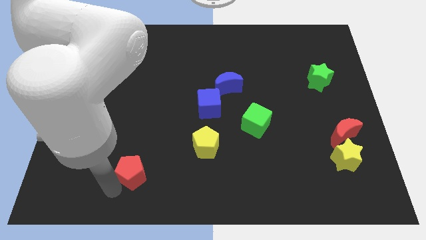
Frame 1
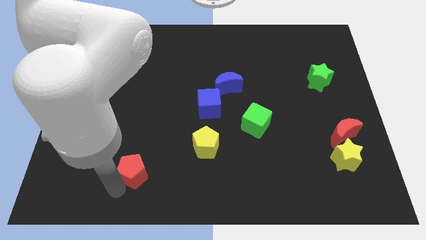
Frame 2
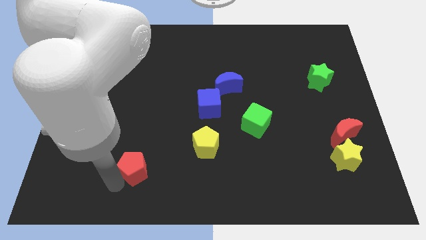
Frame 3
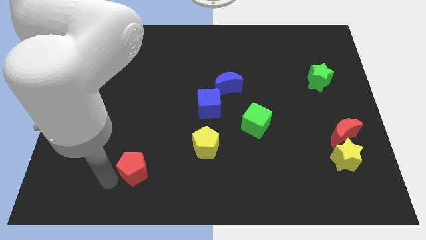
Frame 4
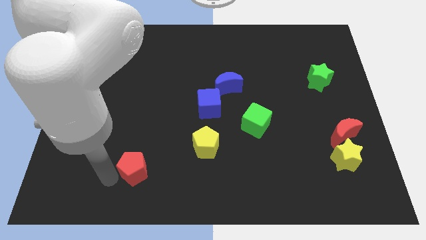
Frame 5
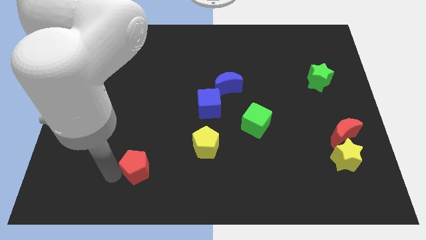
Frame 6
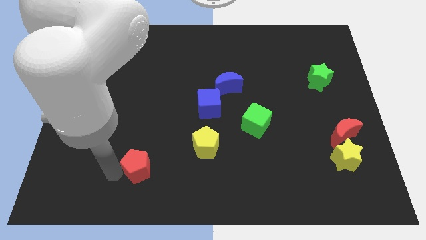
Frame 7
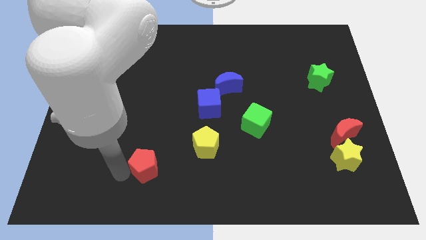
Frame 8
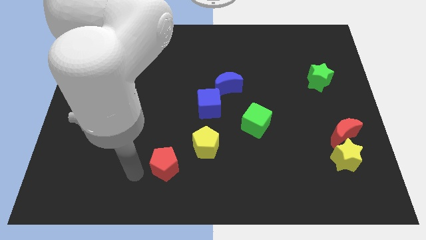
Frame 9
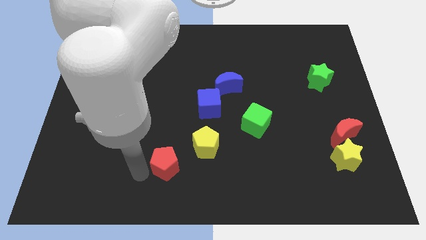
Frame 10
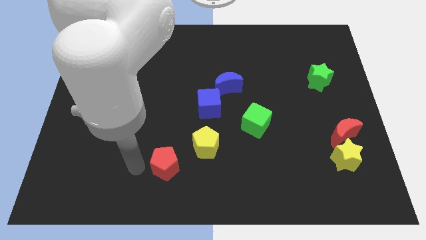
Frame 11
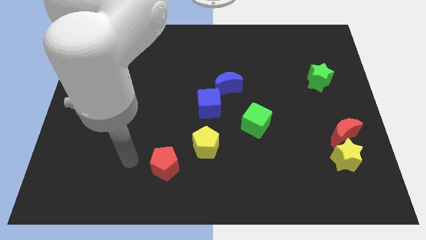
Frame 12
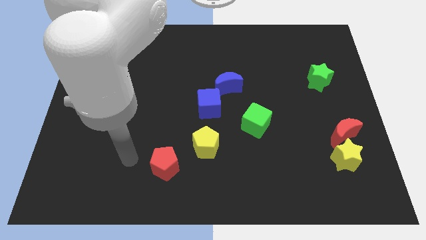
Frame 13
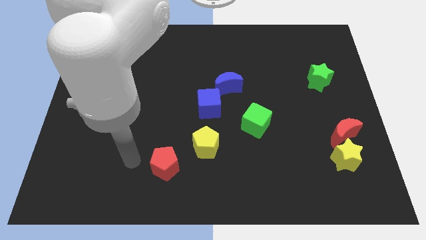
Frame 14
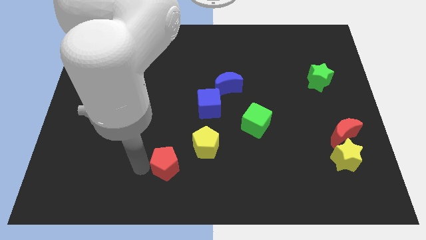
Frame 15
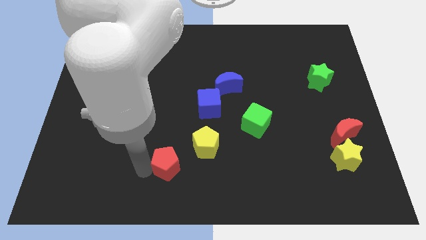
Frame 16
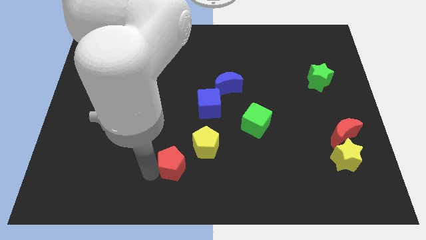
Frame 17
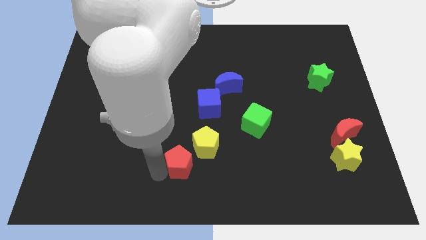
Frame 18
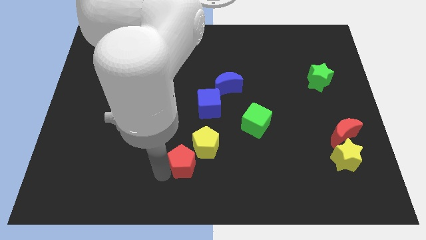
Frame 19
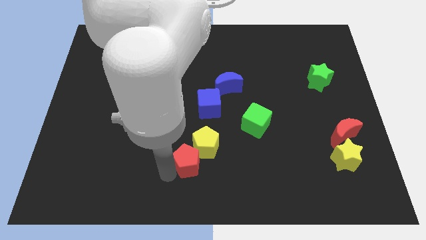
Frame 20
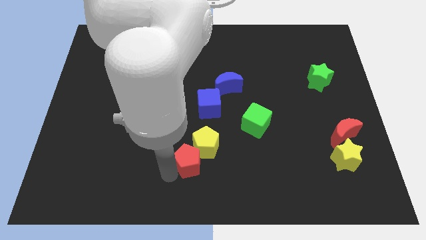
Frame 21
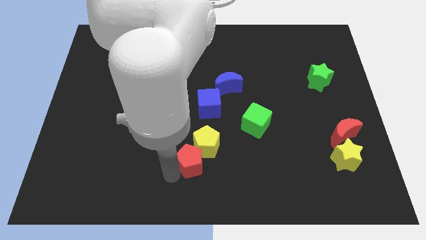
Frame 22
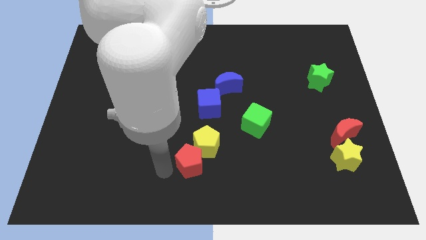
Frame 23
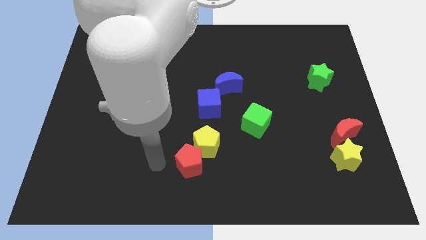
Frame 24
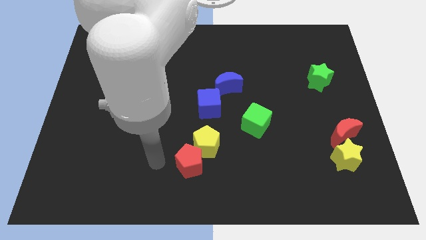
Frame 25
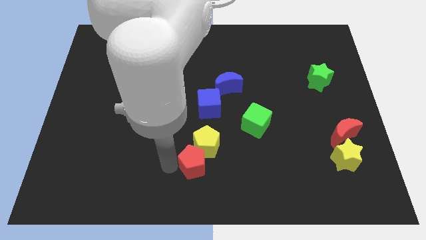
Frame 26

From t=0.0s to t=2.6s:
push the red pentagon into the yellow pentagon

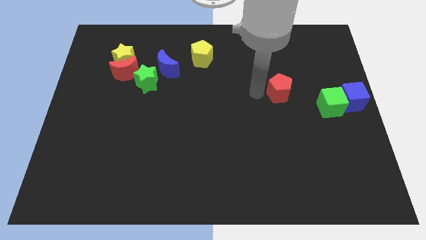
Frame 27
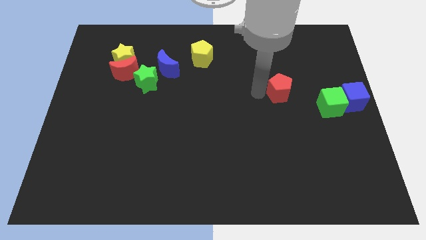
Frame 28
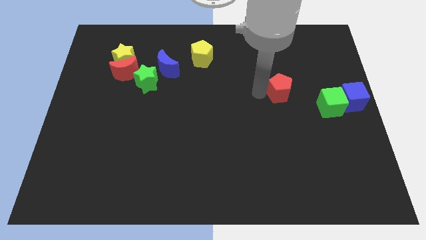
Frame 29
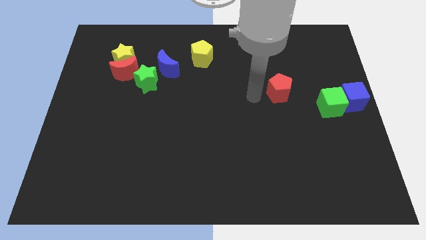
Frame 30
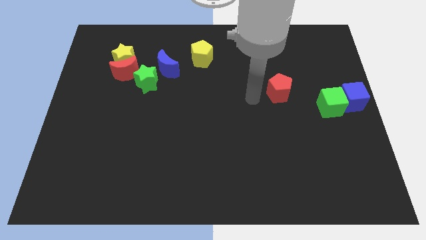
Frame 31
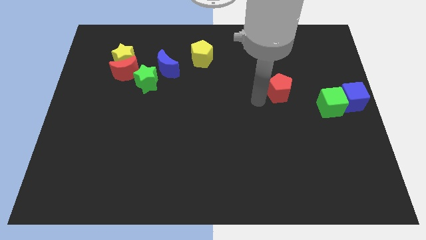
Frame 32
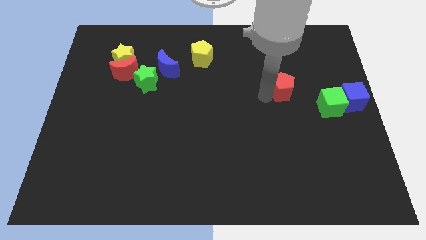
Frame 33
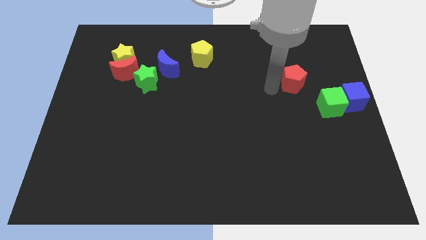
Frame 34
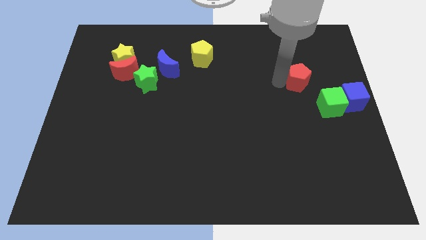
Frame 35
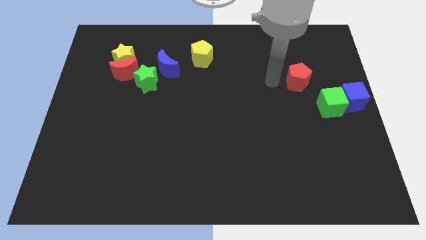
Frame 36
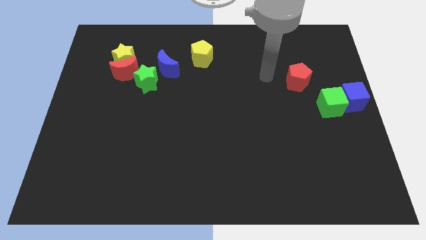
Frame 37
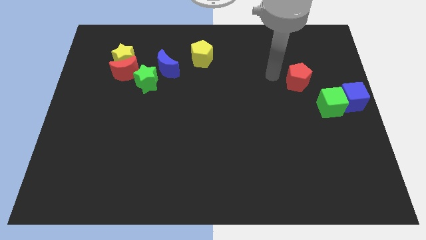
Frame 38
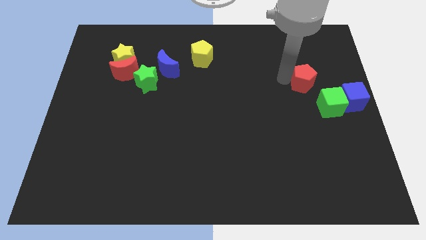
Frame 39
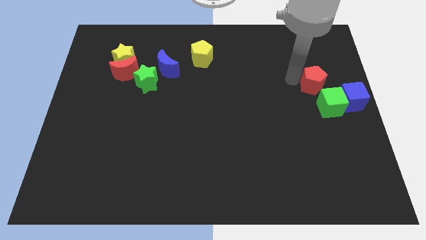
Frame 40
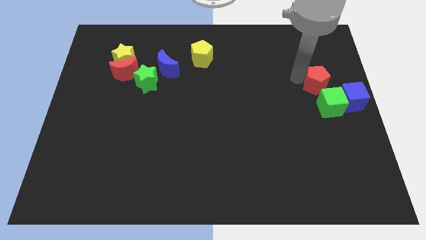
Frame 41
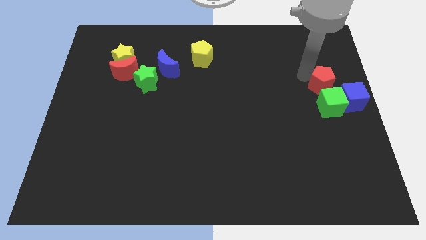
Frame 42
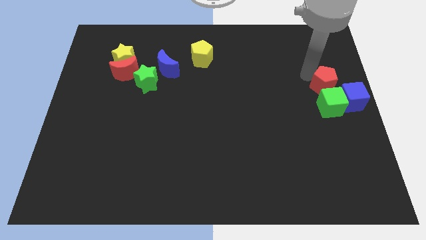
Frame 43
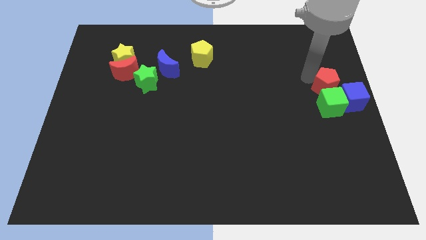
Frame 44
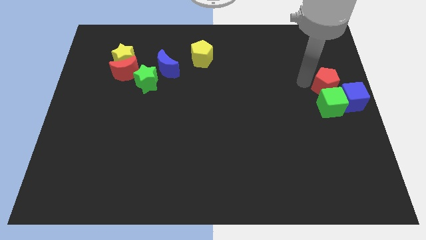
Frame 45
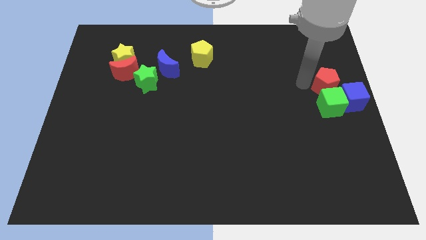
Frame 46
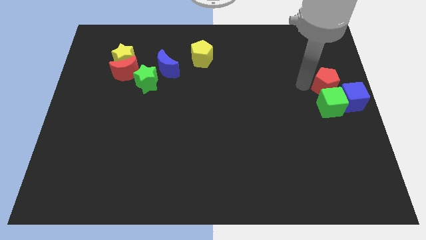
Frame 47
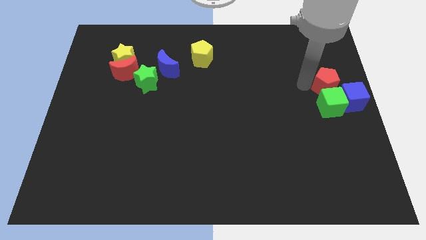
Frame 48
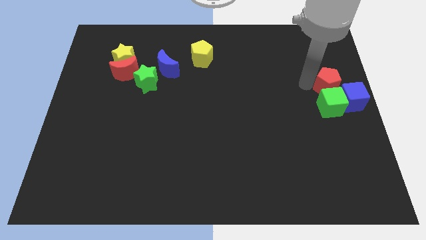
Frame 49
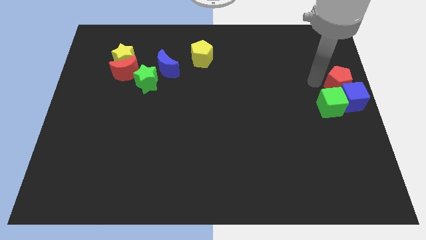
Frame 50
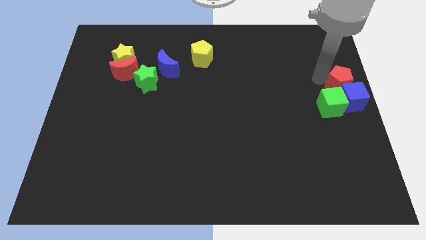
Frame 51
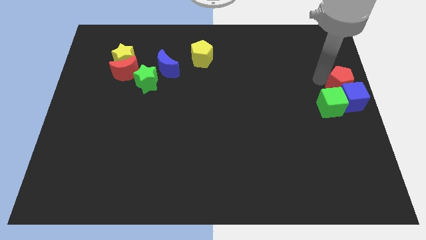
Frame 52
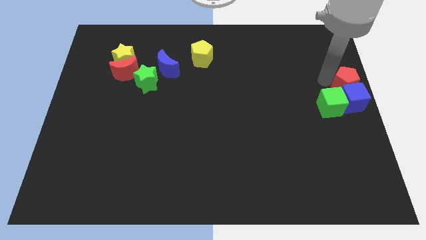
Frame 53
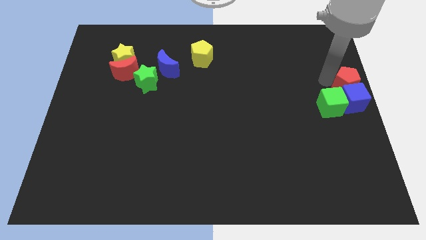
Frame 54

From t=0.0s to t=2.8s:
place the red pentagon above the blue cube

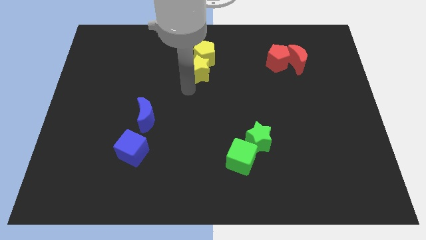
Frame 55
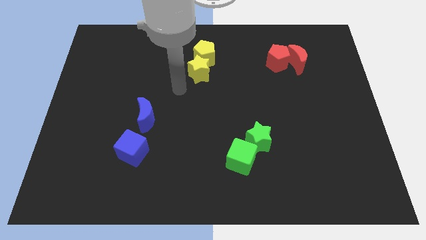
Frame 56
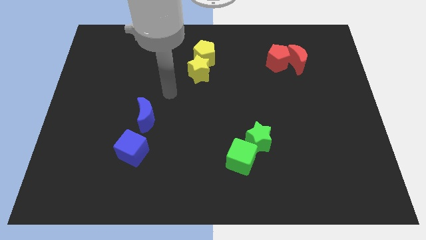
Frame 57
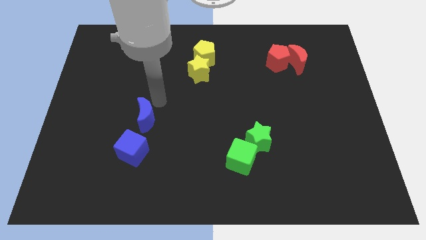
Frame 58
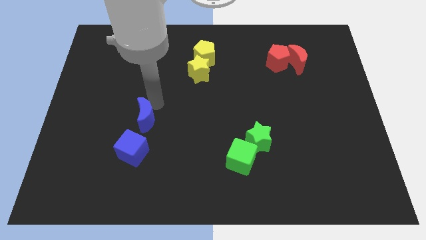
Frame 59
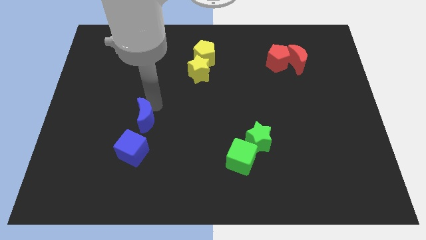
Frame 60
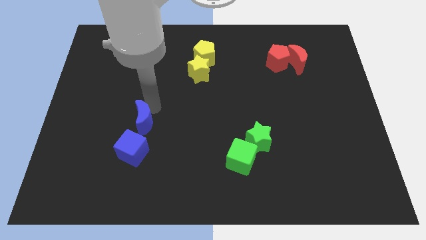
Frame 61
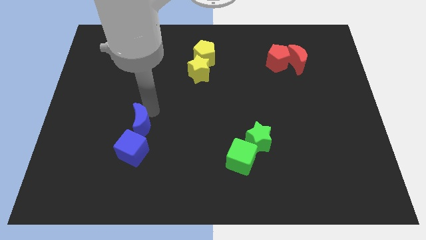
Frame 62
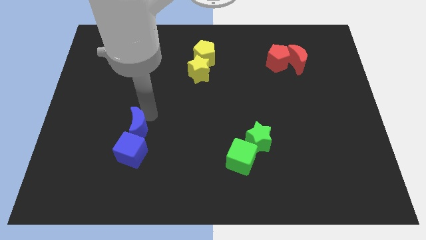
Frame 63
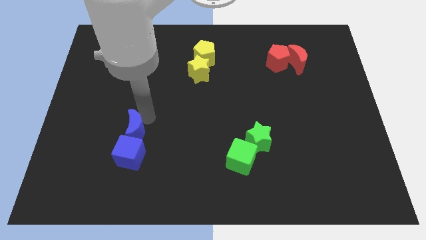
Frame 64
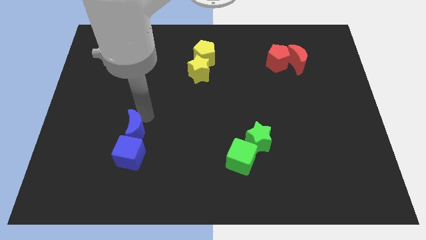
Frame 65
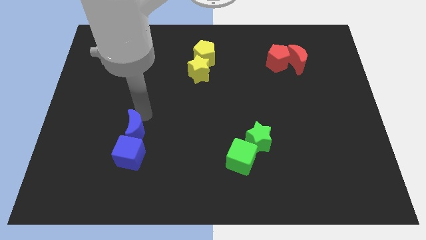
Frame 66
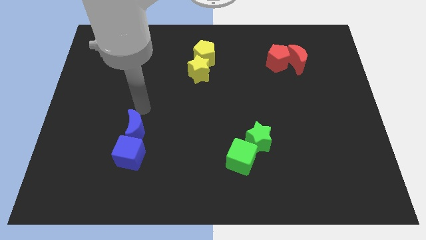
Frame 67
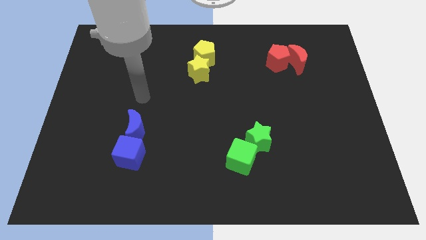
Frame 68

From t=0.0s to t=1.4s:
slightly push the blue crescent into the blue cube

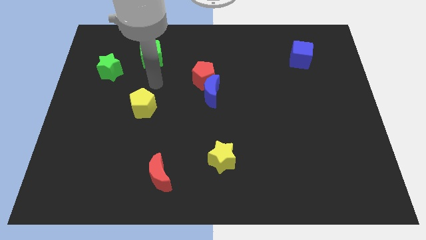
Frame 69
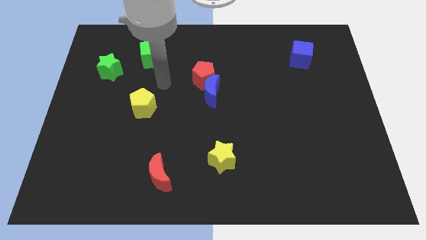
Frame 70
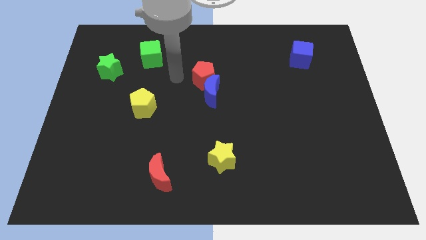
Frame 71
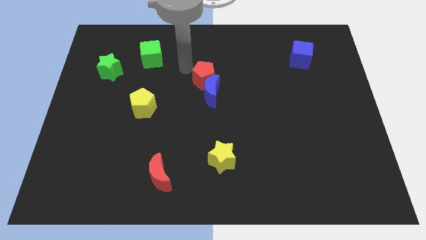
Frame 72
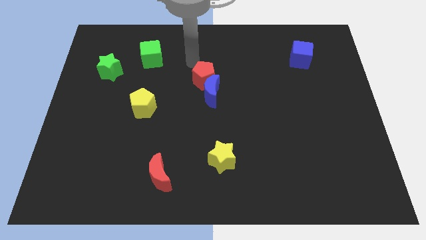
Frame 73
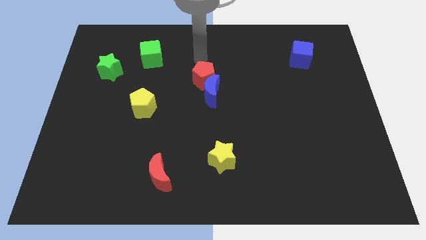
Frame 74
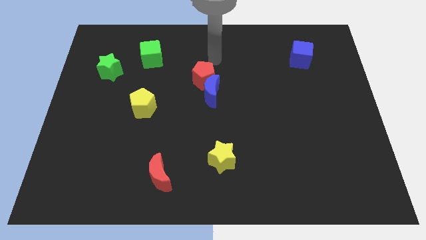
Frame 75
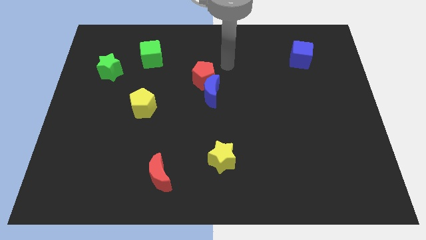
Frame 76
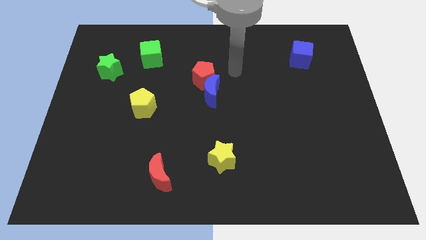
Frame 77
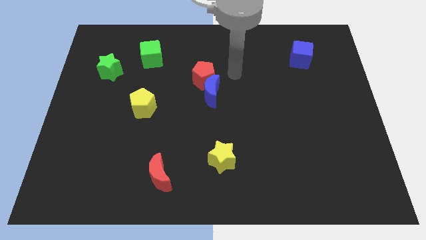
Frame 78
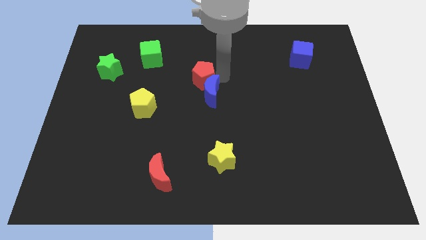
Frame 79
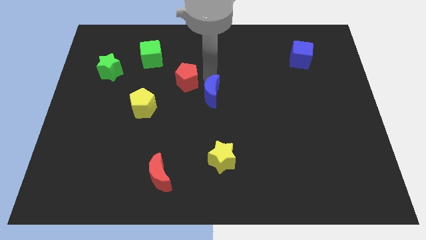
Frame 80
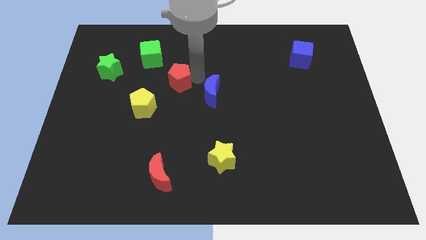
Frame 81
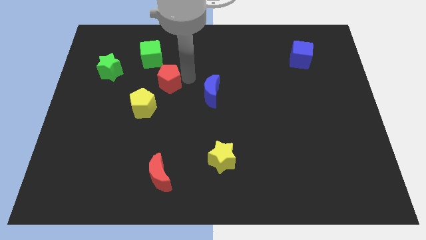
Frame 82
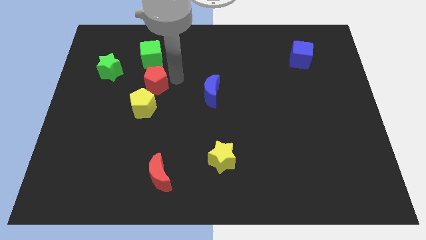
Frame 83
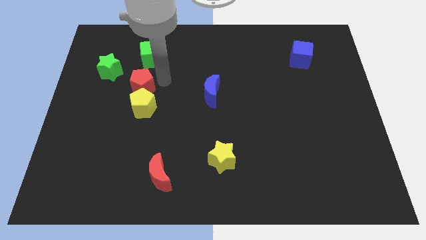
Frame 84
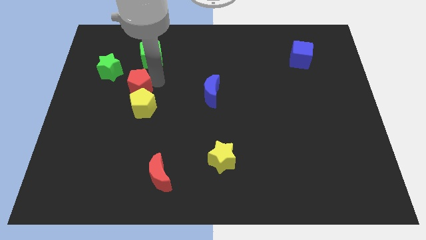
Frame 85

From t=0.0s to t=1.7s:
place the red pentagon above the yellow pentagon

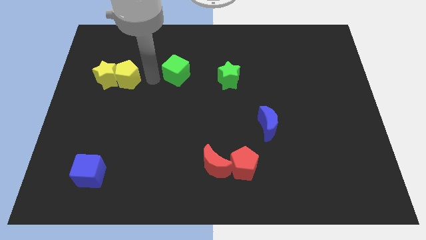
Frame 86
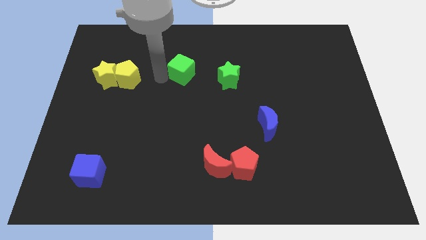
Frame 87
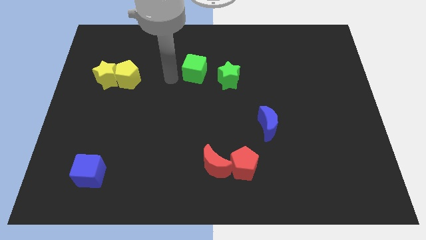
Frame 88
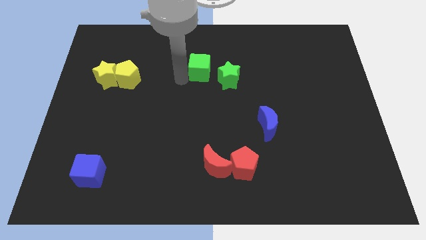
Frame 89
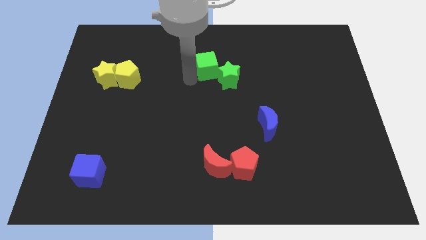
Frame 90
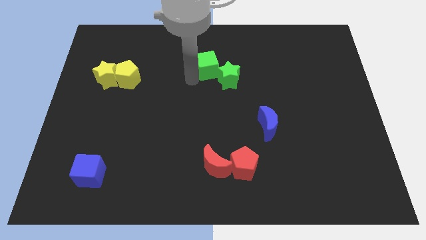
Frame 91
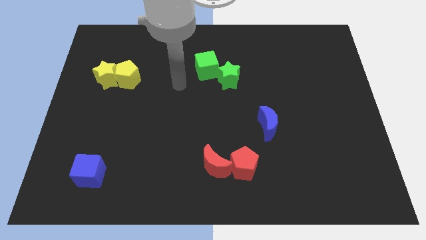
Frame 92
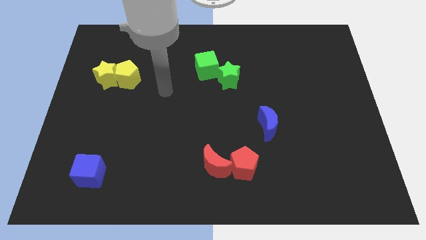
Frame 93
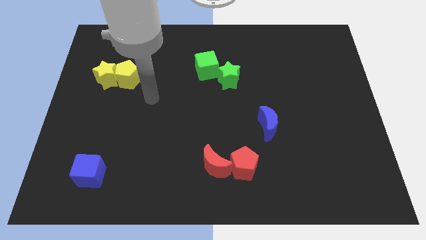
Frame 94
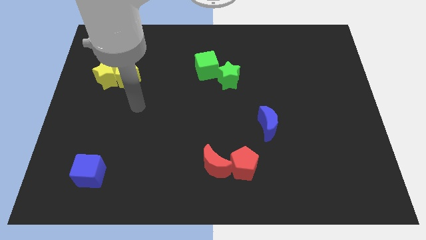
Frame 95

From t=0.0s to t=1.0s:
push green cube to the green star
